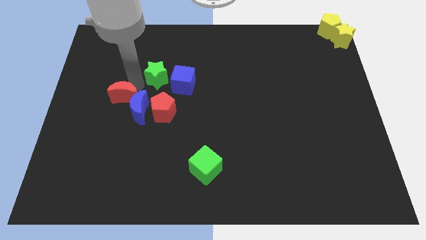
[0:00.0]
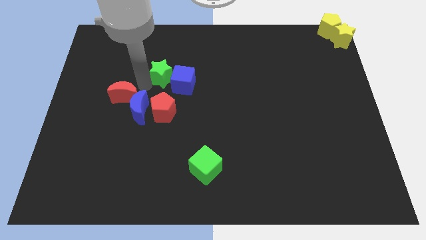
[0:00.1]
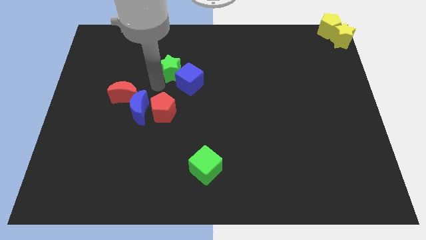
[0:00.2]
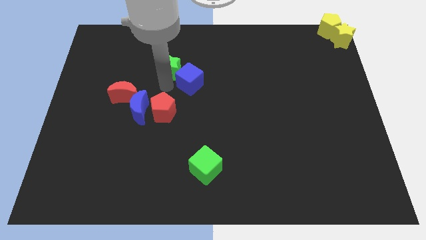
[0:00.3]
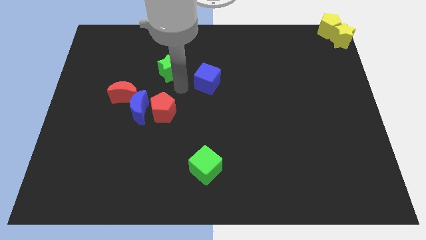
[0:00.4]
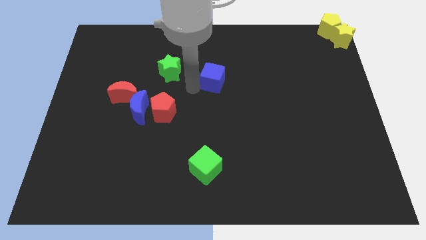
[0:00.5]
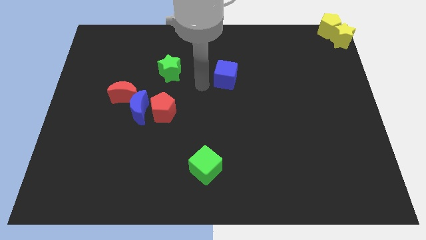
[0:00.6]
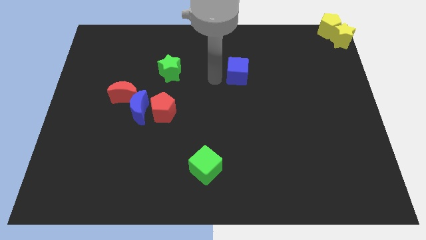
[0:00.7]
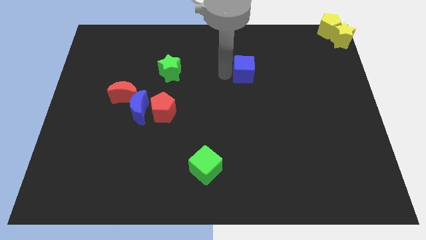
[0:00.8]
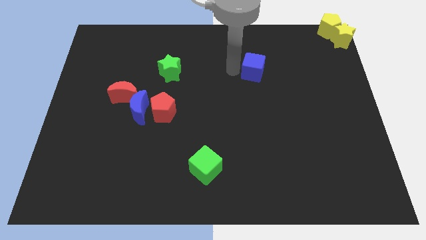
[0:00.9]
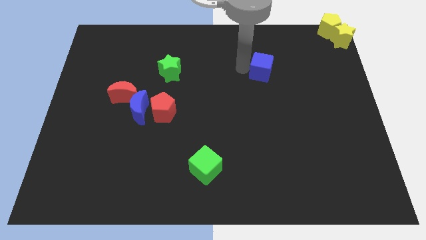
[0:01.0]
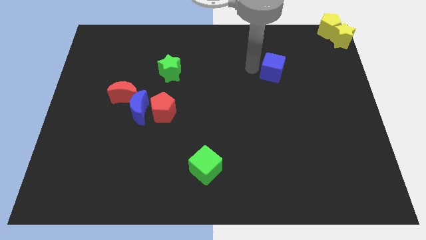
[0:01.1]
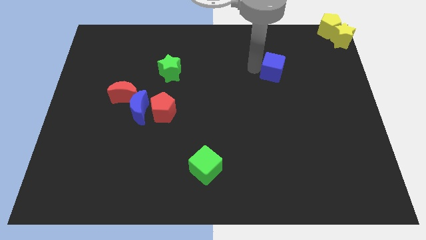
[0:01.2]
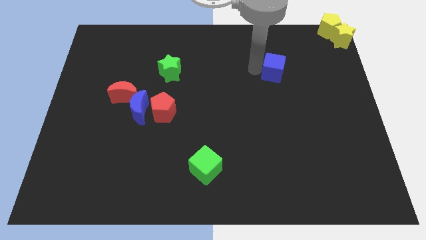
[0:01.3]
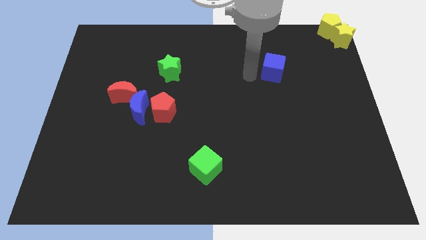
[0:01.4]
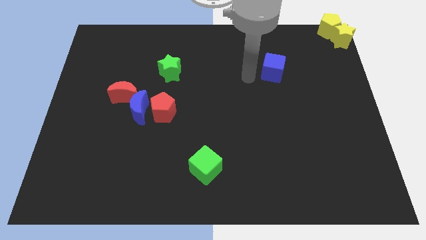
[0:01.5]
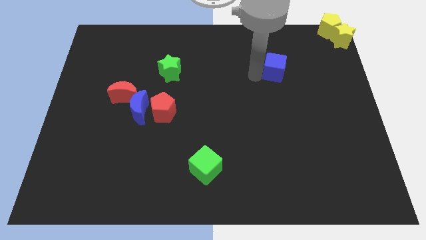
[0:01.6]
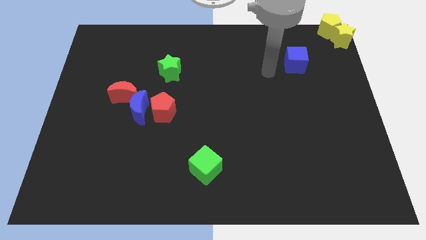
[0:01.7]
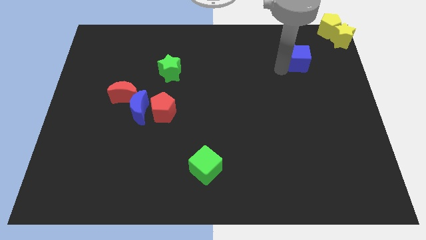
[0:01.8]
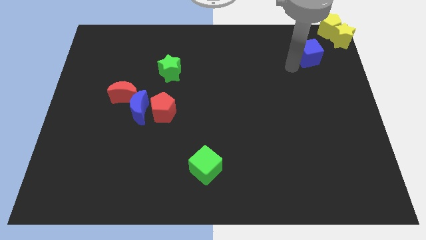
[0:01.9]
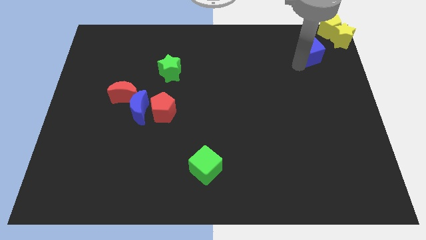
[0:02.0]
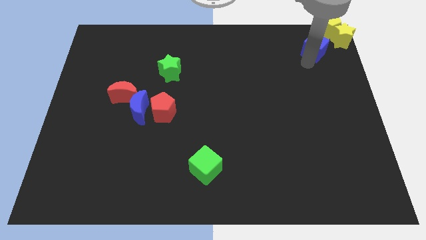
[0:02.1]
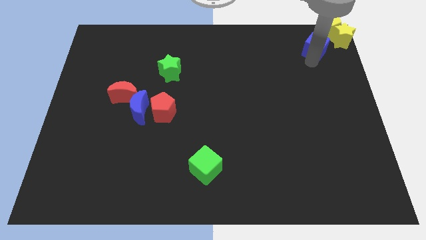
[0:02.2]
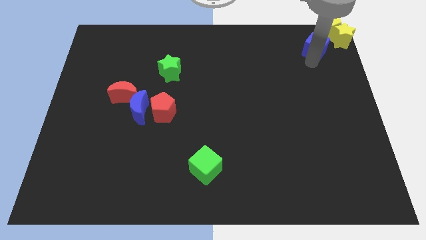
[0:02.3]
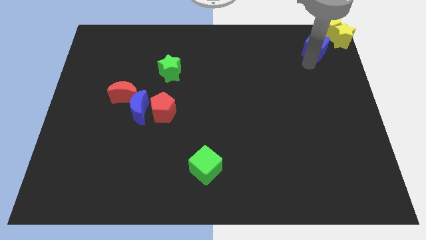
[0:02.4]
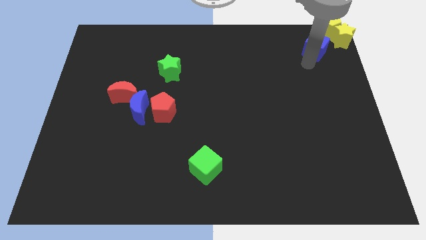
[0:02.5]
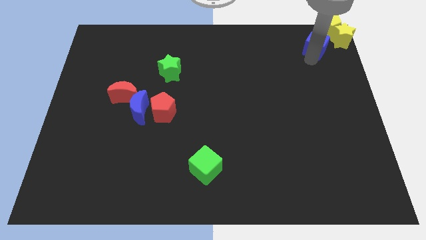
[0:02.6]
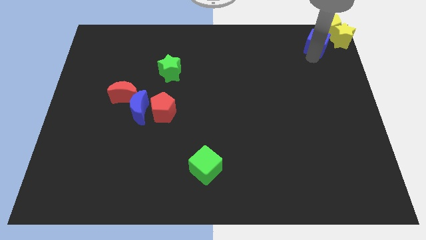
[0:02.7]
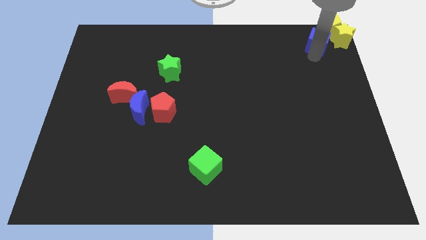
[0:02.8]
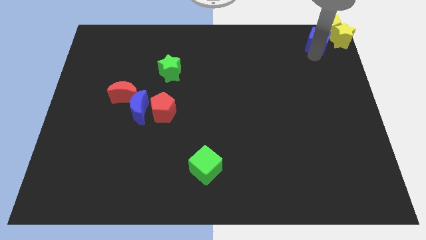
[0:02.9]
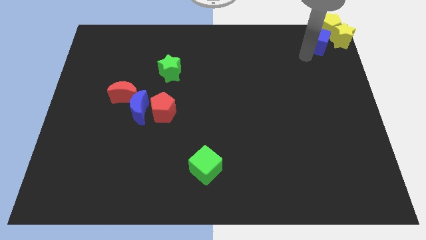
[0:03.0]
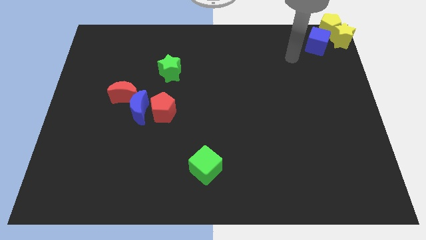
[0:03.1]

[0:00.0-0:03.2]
slightly move the blue moon towards the group of blocks

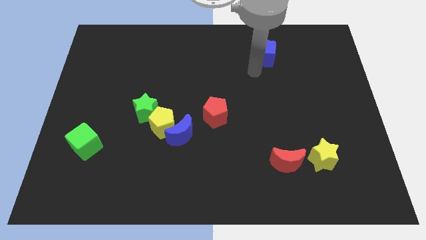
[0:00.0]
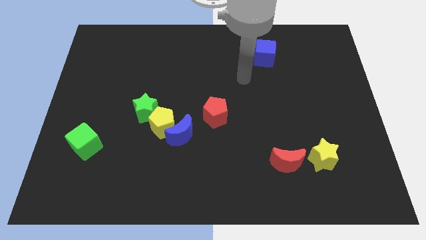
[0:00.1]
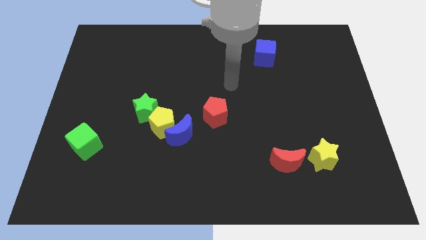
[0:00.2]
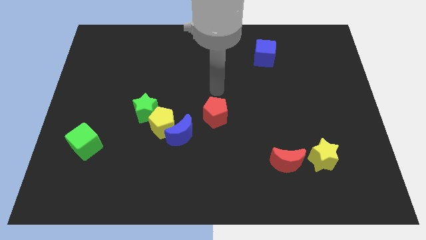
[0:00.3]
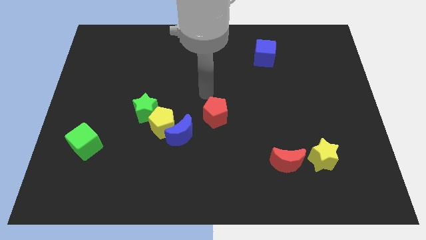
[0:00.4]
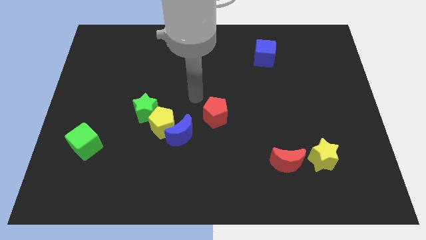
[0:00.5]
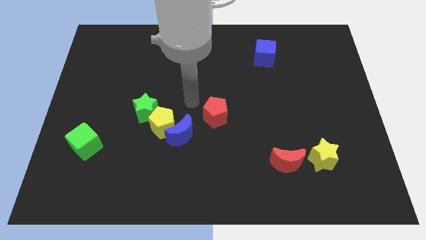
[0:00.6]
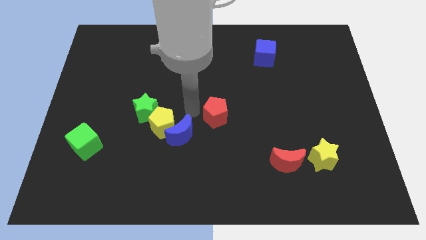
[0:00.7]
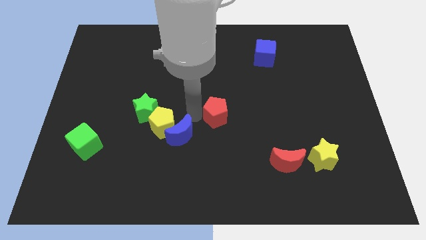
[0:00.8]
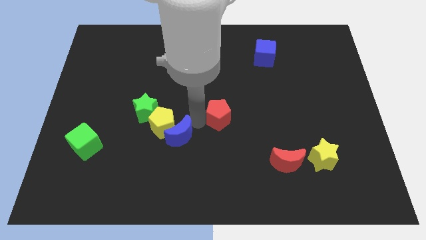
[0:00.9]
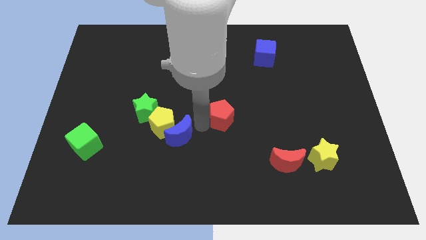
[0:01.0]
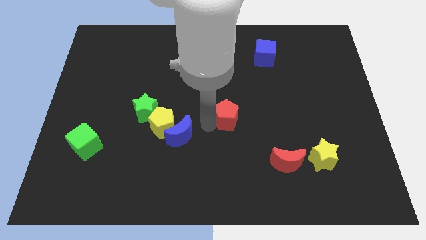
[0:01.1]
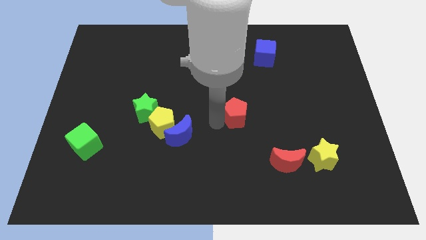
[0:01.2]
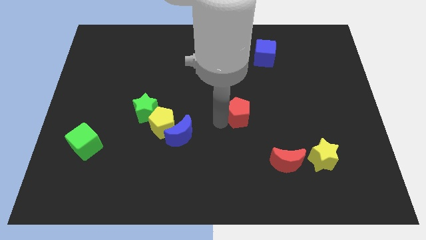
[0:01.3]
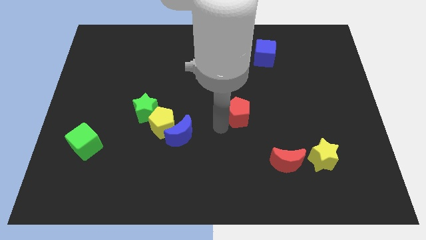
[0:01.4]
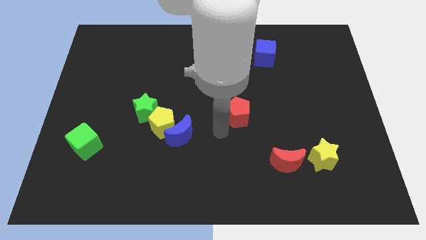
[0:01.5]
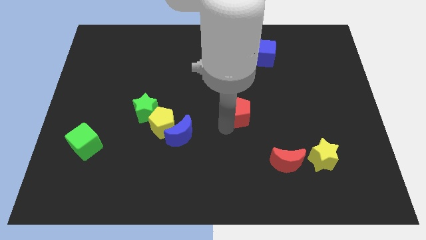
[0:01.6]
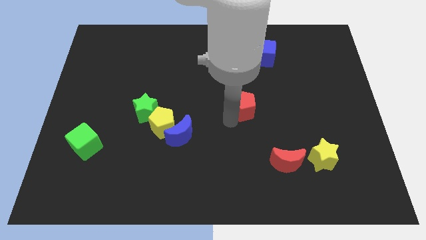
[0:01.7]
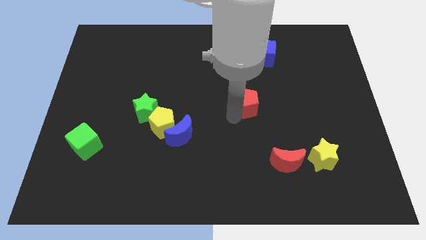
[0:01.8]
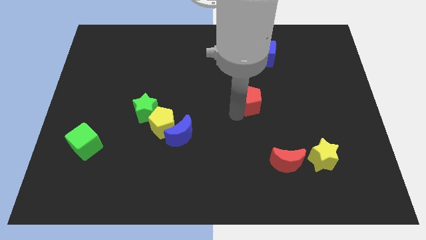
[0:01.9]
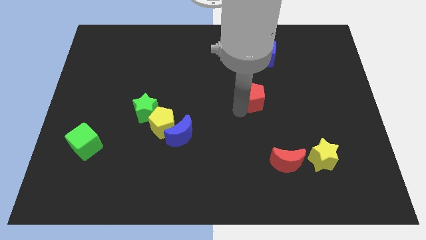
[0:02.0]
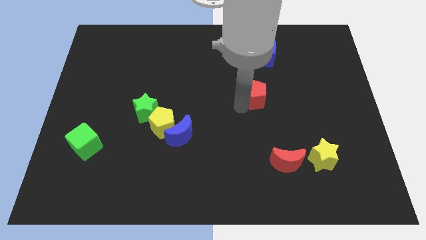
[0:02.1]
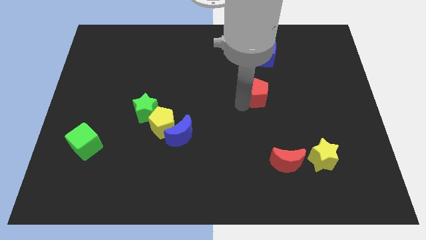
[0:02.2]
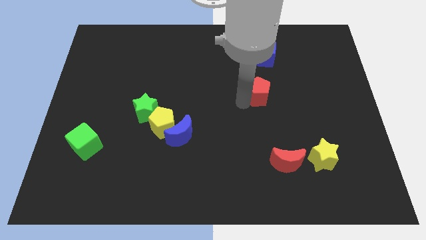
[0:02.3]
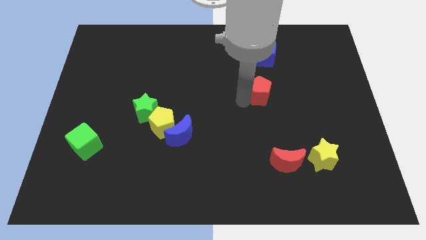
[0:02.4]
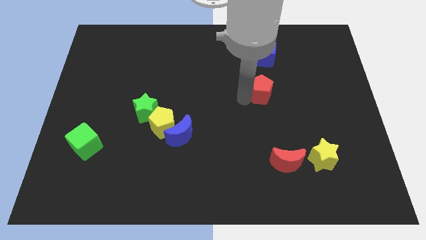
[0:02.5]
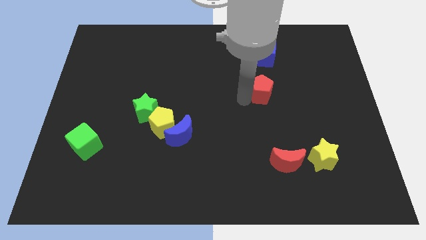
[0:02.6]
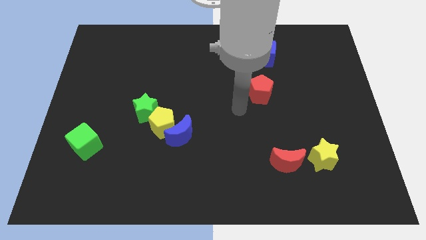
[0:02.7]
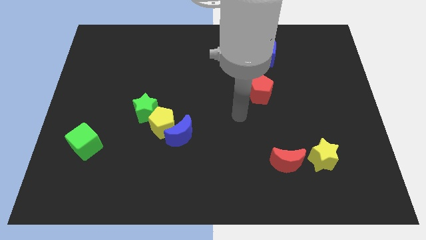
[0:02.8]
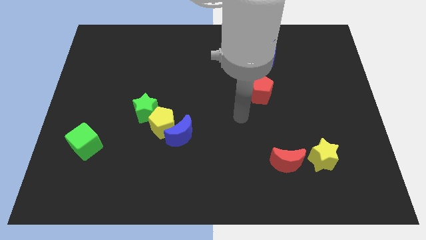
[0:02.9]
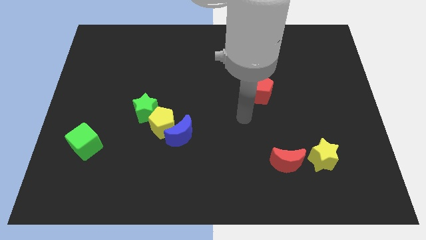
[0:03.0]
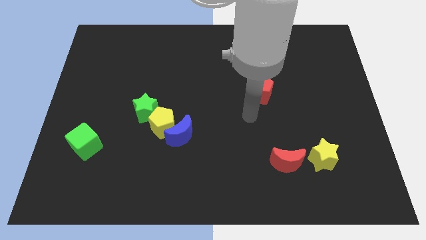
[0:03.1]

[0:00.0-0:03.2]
push the red pentagon closer to the blue cube

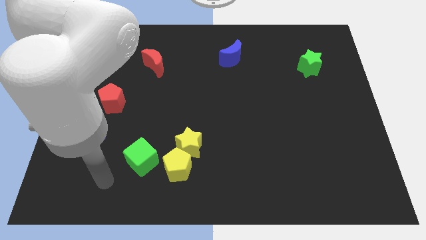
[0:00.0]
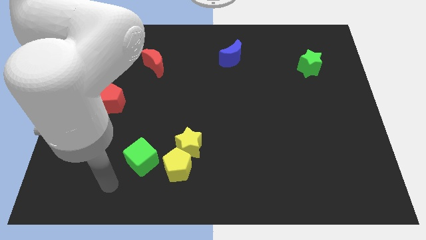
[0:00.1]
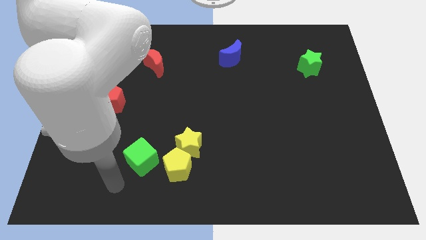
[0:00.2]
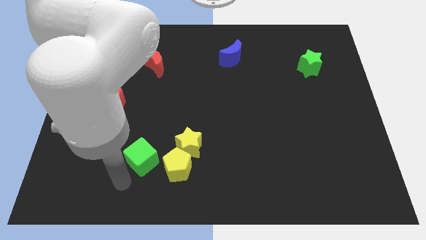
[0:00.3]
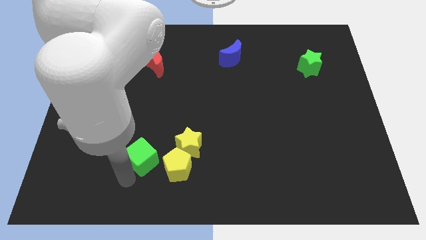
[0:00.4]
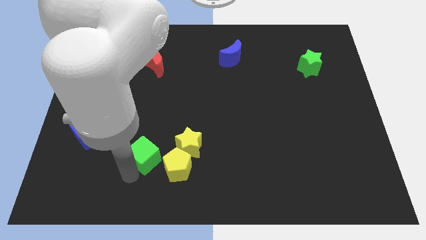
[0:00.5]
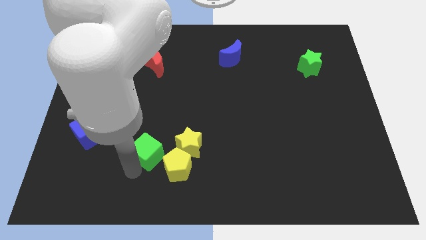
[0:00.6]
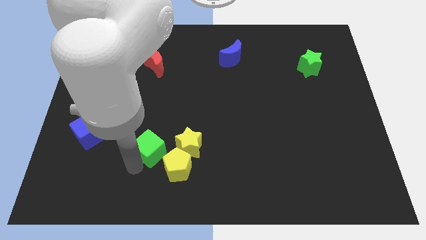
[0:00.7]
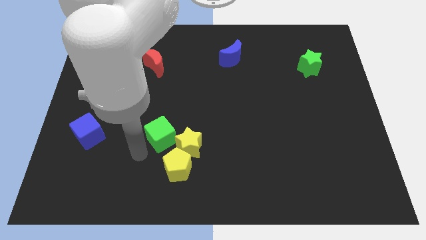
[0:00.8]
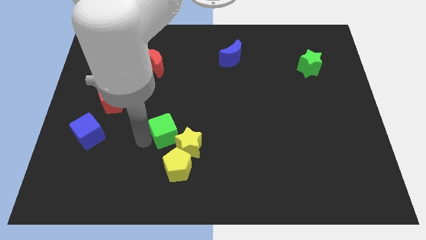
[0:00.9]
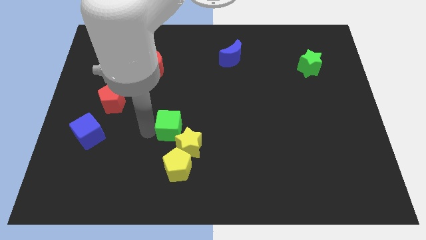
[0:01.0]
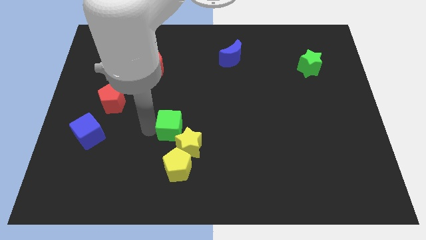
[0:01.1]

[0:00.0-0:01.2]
move green cube to left above the yellow star

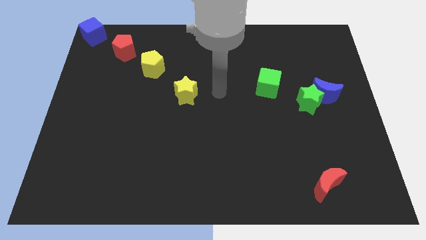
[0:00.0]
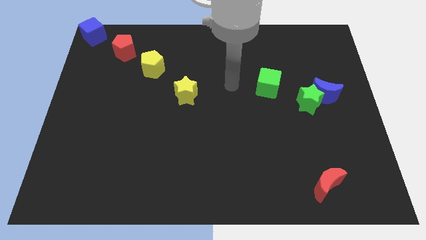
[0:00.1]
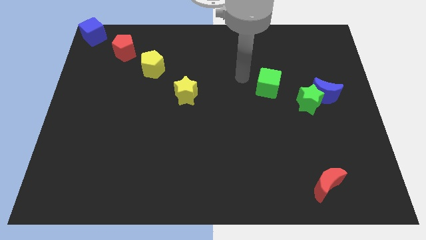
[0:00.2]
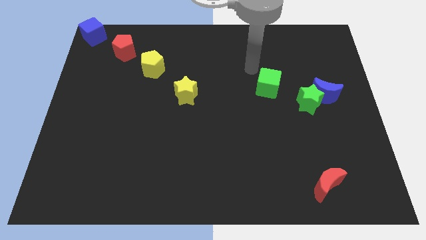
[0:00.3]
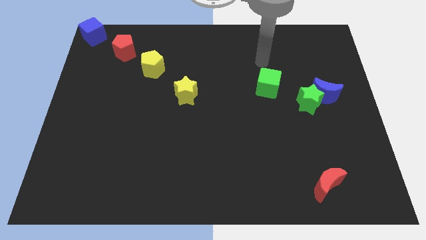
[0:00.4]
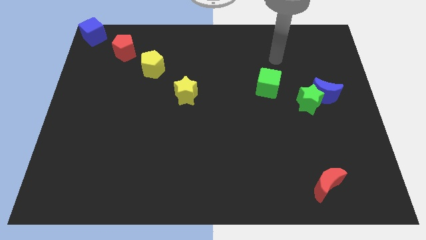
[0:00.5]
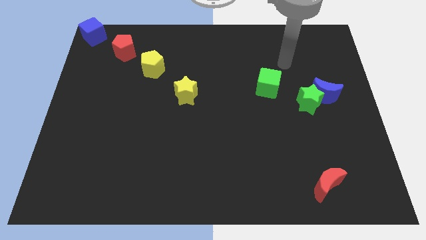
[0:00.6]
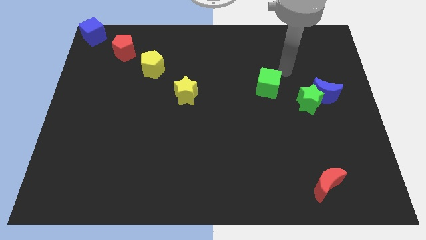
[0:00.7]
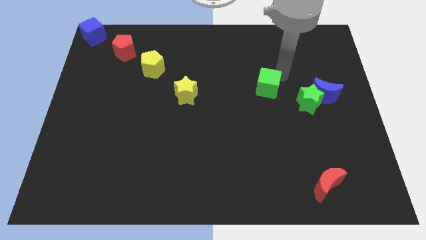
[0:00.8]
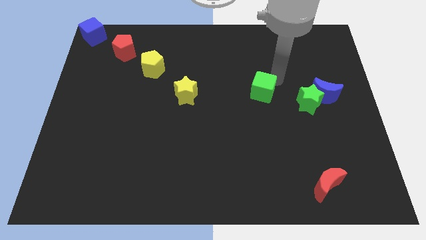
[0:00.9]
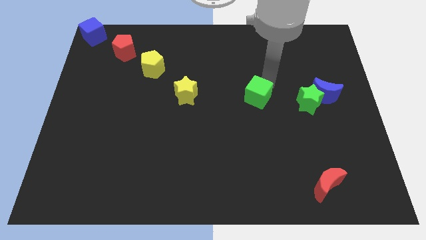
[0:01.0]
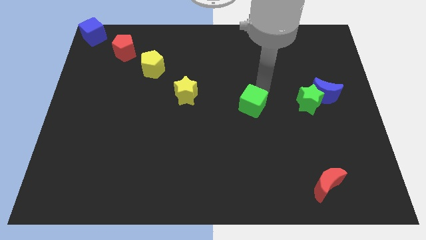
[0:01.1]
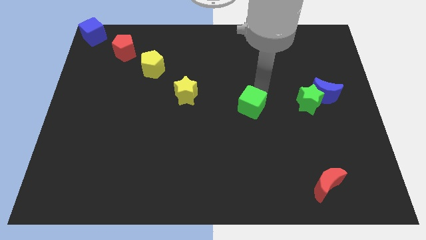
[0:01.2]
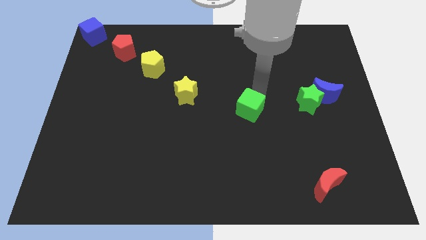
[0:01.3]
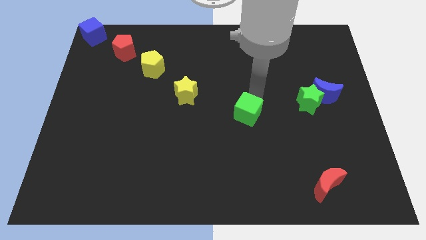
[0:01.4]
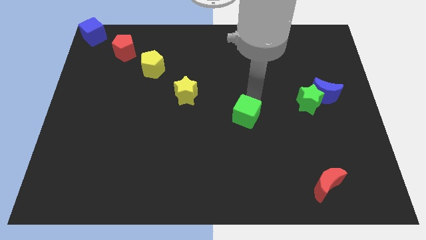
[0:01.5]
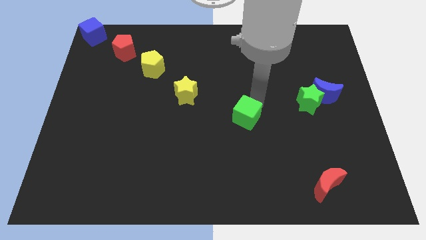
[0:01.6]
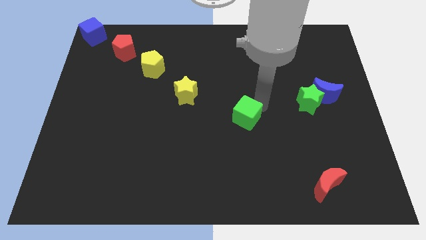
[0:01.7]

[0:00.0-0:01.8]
move the green cube towards middle of the board
